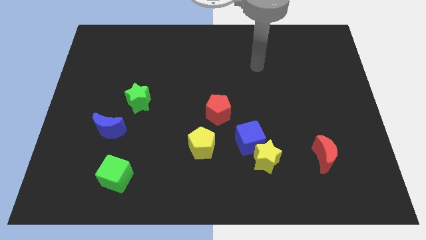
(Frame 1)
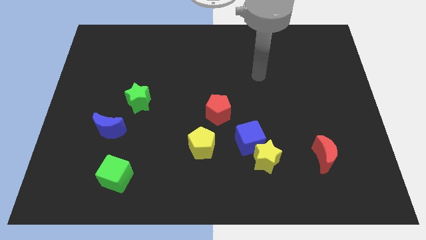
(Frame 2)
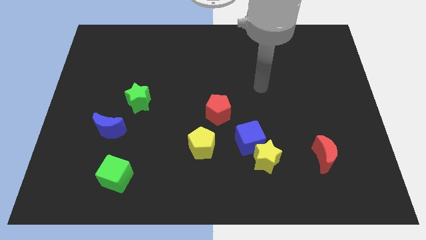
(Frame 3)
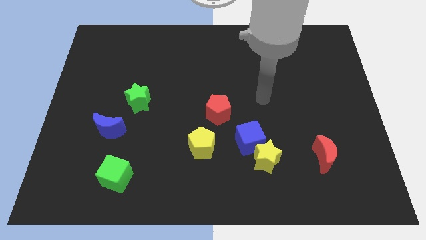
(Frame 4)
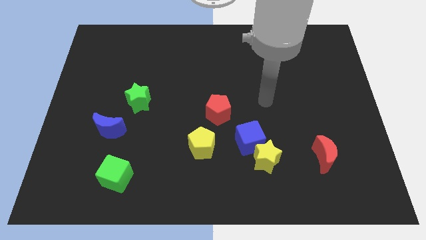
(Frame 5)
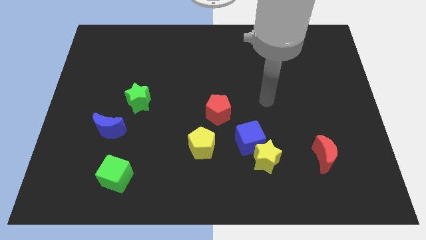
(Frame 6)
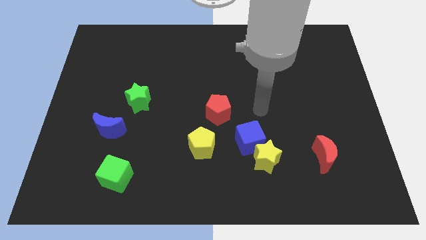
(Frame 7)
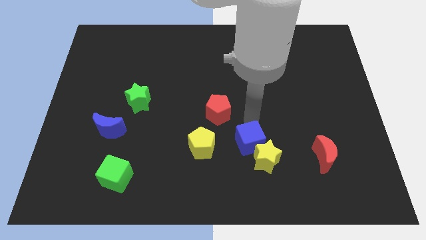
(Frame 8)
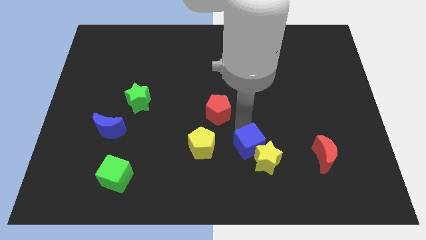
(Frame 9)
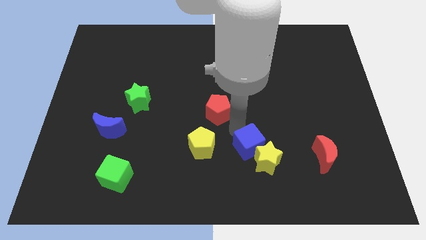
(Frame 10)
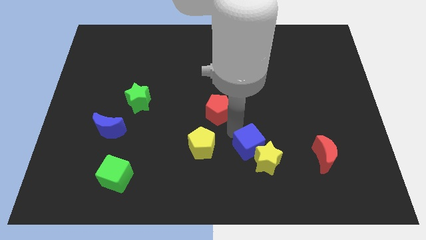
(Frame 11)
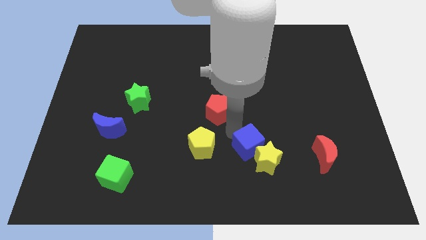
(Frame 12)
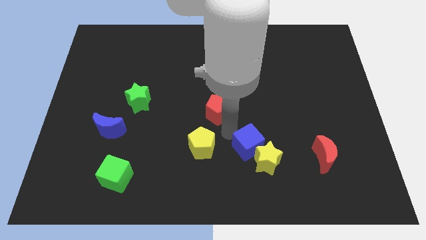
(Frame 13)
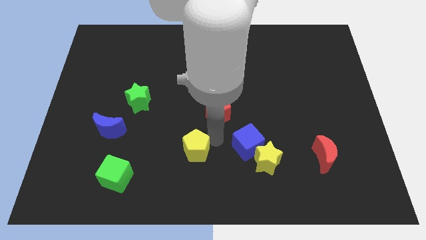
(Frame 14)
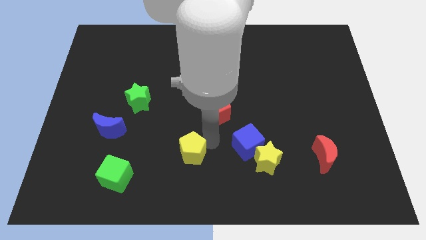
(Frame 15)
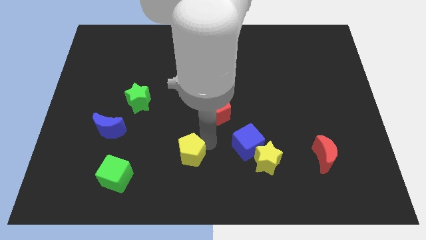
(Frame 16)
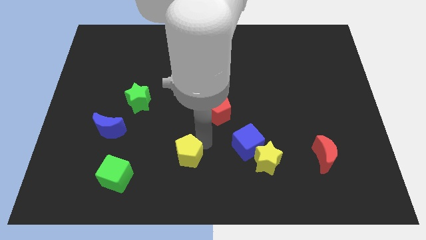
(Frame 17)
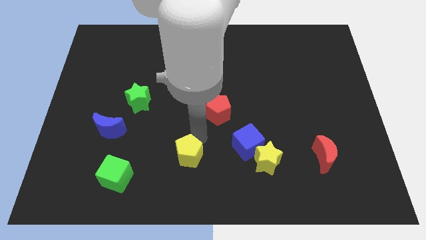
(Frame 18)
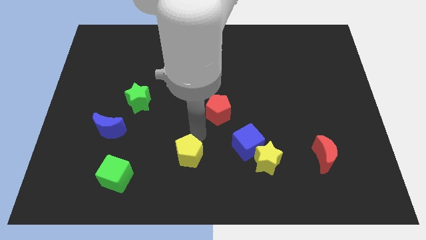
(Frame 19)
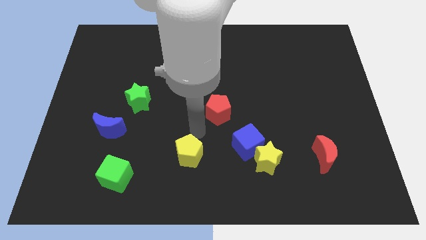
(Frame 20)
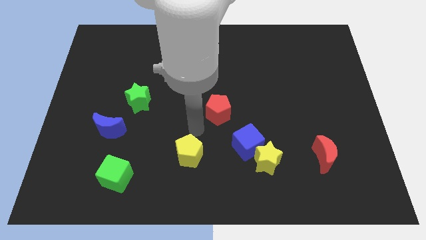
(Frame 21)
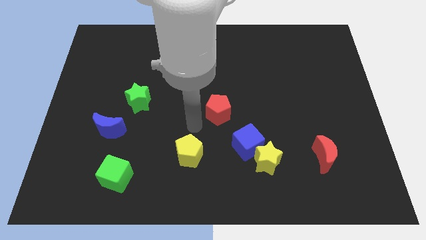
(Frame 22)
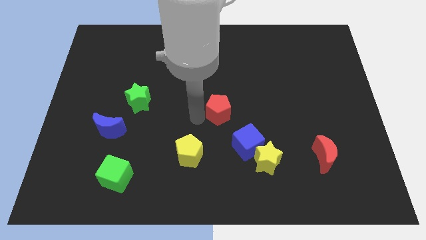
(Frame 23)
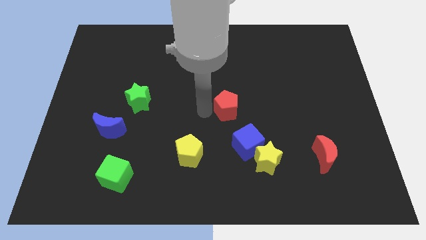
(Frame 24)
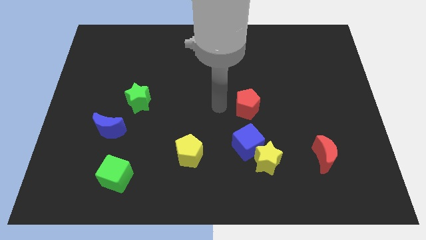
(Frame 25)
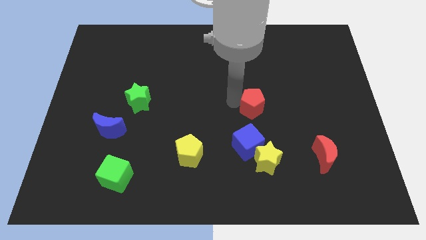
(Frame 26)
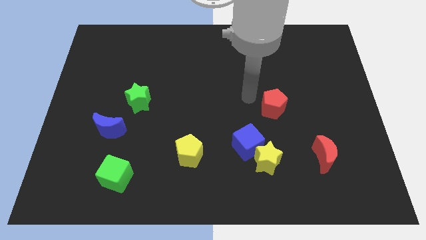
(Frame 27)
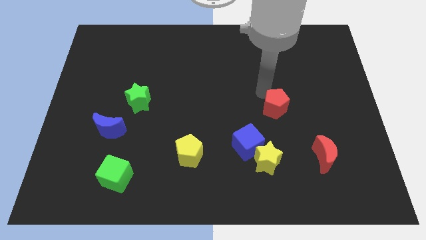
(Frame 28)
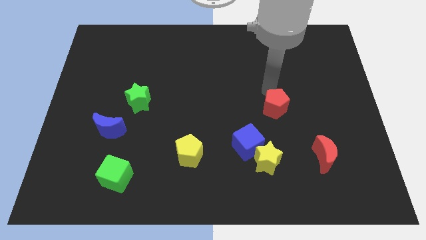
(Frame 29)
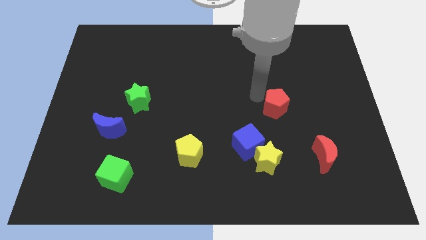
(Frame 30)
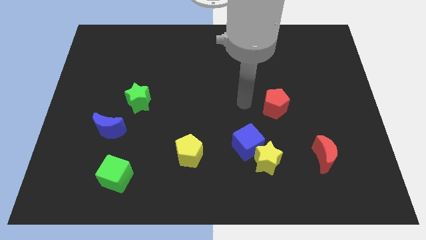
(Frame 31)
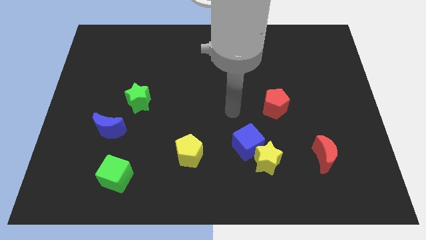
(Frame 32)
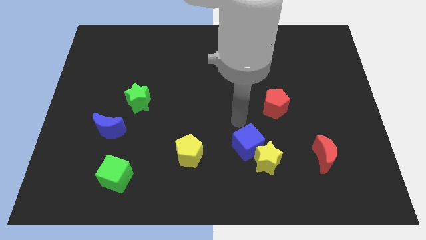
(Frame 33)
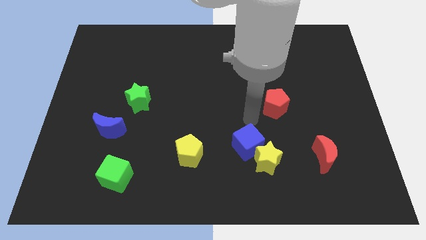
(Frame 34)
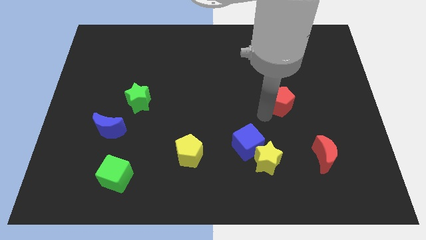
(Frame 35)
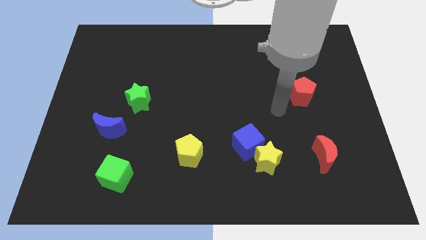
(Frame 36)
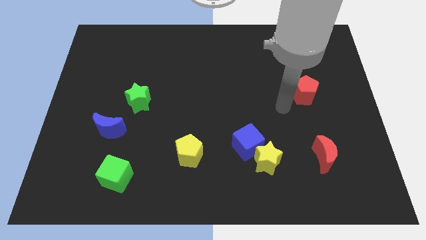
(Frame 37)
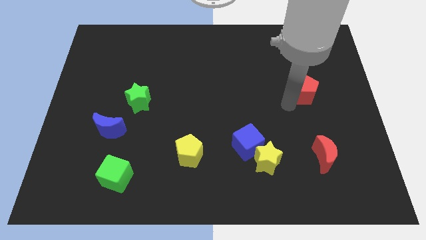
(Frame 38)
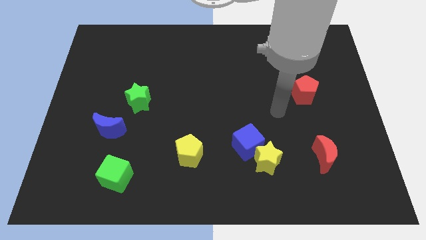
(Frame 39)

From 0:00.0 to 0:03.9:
place red pentagon to the top of the red crescent

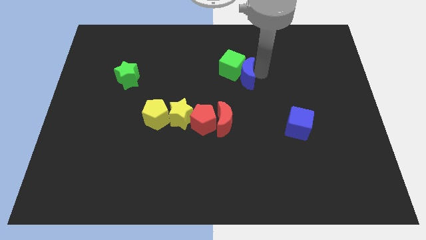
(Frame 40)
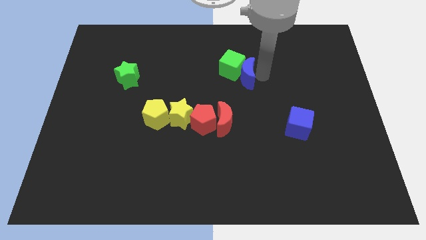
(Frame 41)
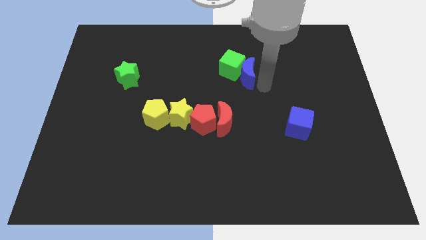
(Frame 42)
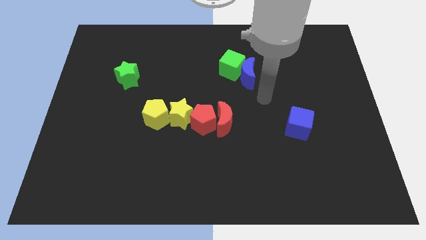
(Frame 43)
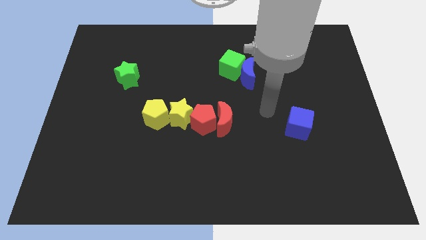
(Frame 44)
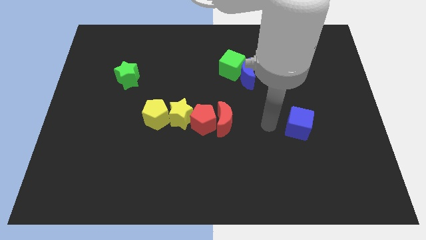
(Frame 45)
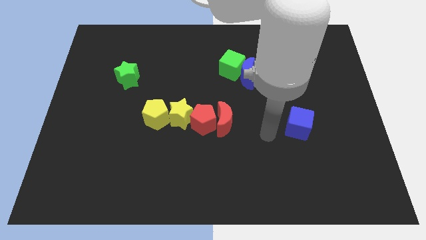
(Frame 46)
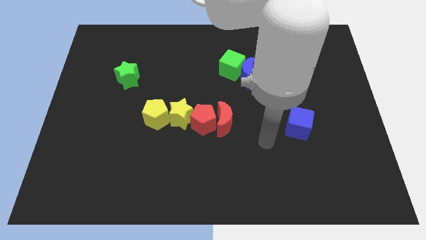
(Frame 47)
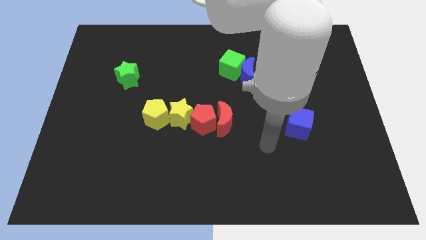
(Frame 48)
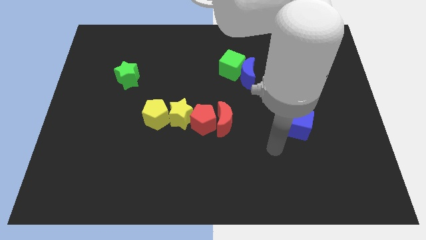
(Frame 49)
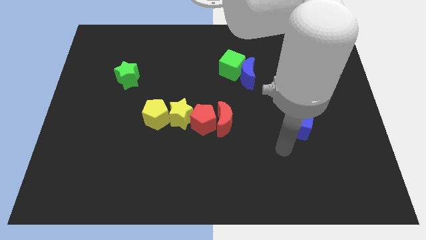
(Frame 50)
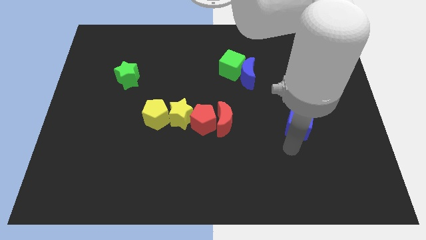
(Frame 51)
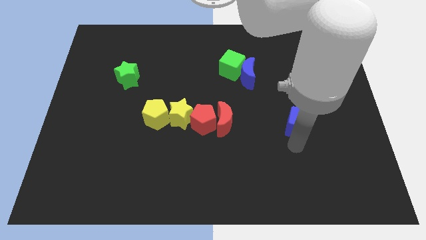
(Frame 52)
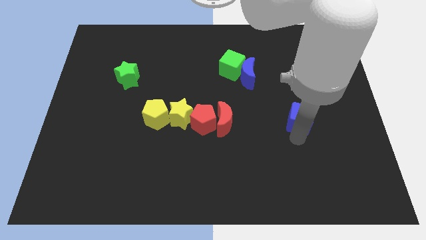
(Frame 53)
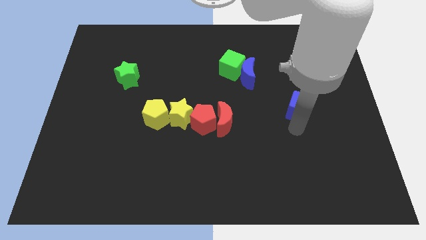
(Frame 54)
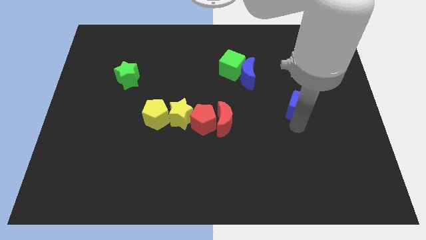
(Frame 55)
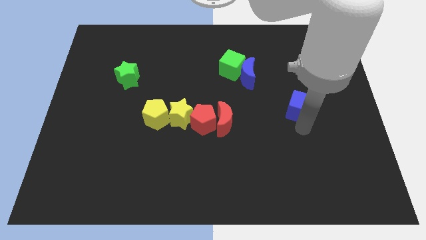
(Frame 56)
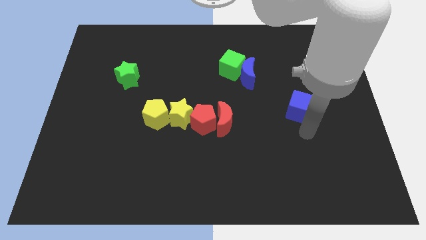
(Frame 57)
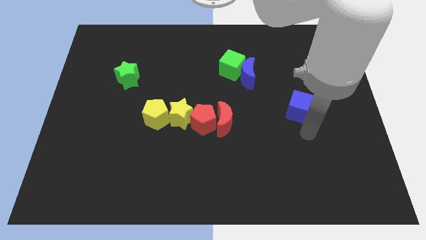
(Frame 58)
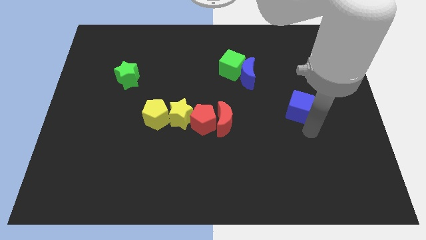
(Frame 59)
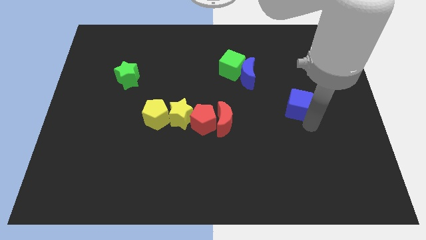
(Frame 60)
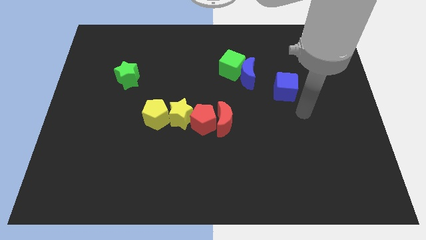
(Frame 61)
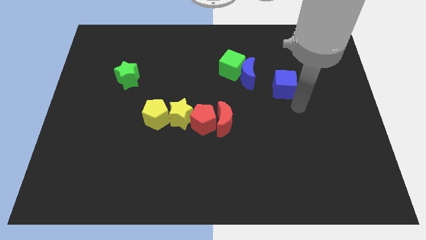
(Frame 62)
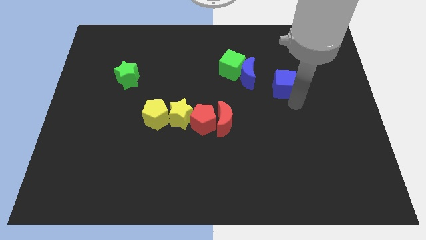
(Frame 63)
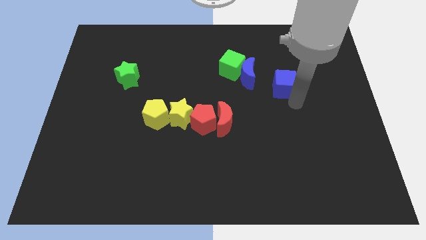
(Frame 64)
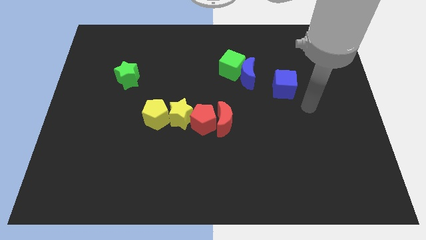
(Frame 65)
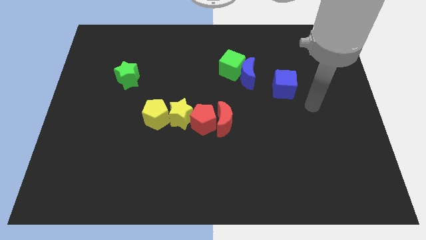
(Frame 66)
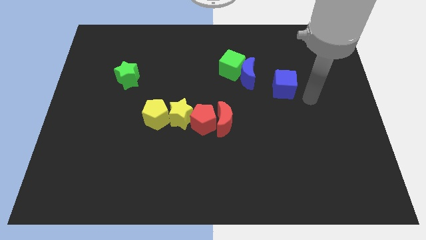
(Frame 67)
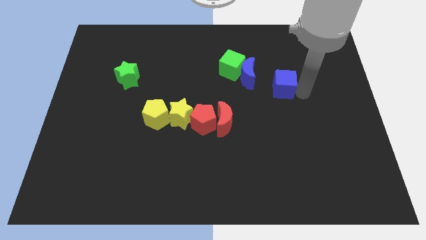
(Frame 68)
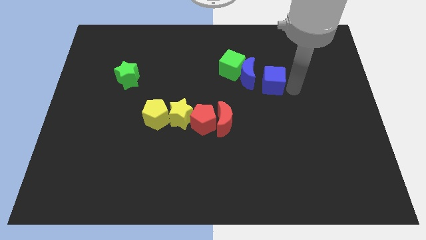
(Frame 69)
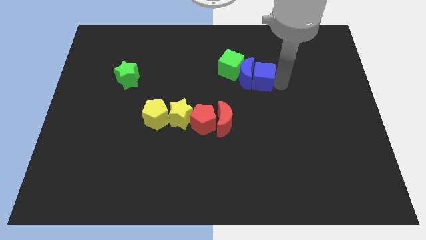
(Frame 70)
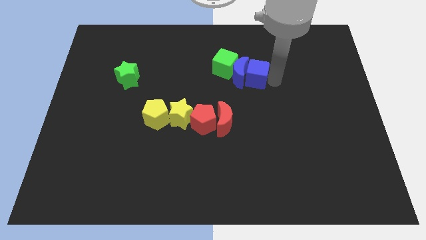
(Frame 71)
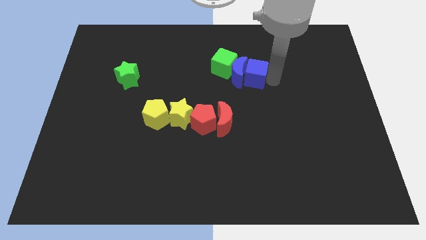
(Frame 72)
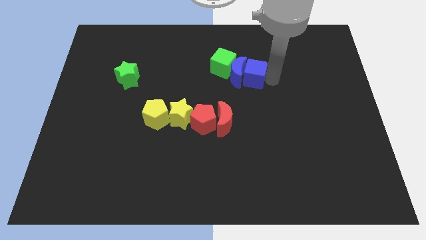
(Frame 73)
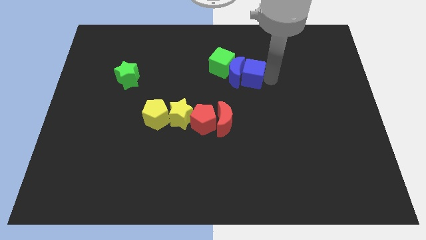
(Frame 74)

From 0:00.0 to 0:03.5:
push the blue cube into the blue moon

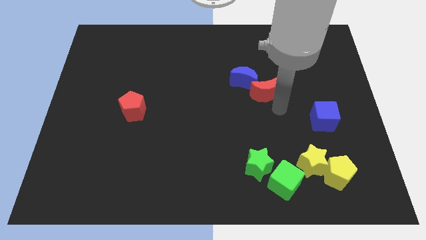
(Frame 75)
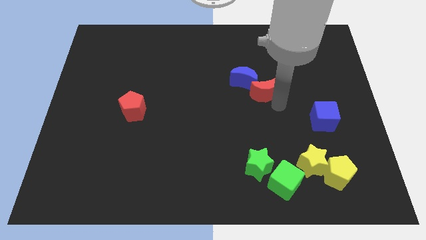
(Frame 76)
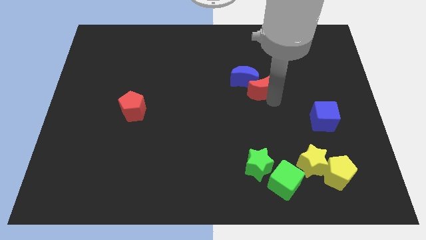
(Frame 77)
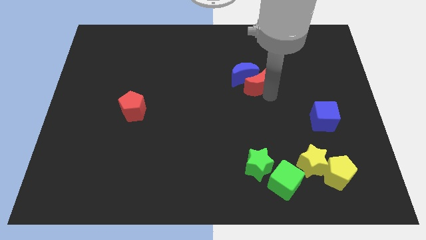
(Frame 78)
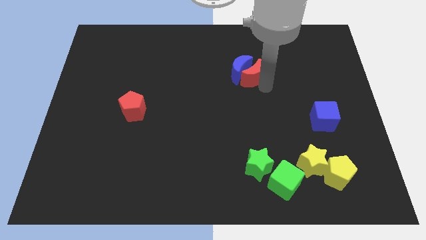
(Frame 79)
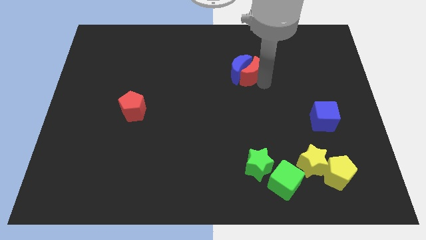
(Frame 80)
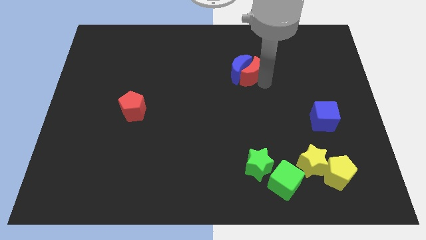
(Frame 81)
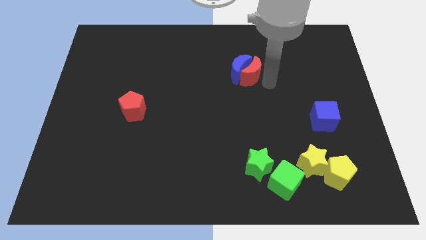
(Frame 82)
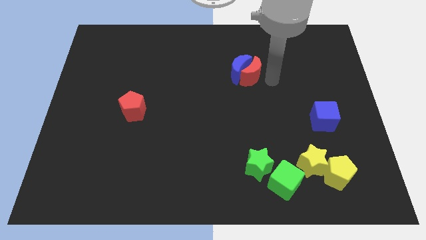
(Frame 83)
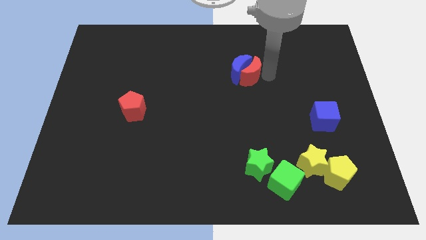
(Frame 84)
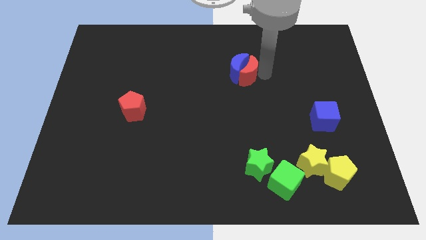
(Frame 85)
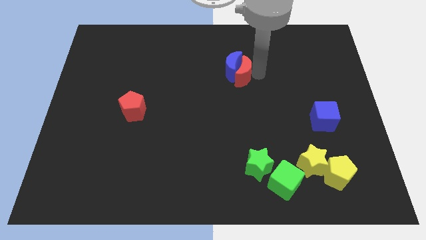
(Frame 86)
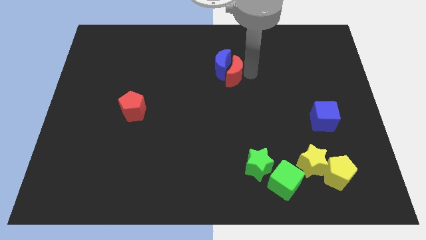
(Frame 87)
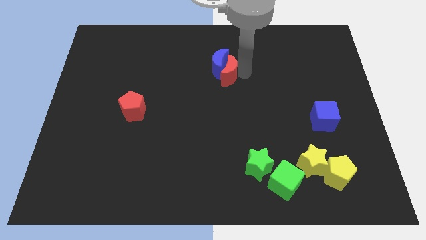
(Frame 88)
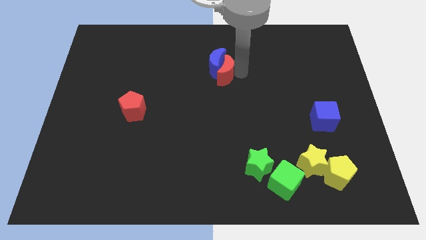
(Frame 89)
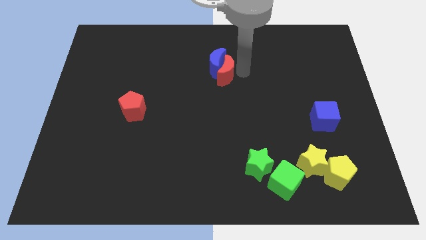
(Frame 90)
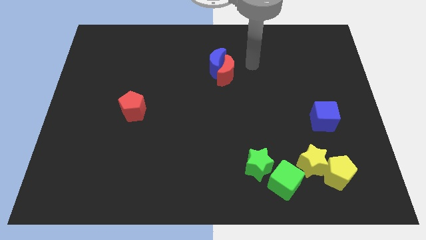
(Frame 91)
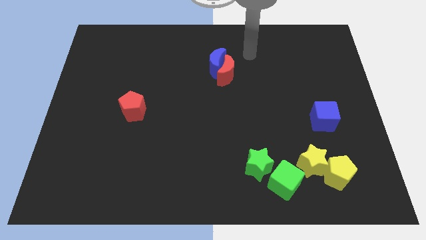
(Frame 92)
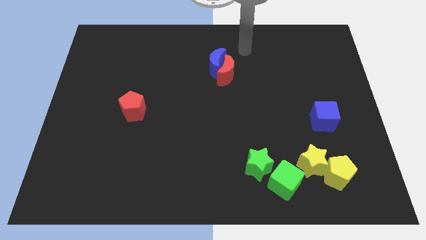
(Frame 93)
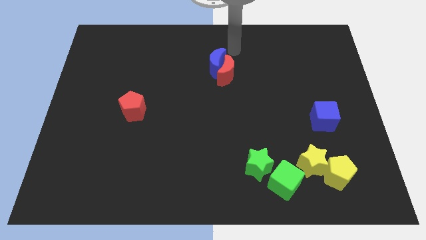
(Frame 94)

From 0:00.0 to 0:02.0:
move the red crescent into the blue crescent
